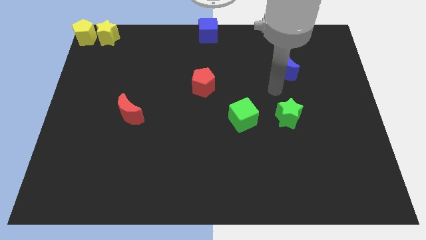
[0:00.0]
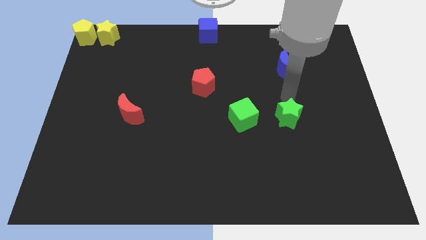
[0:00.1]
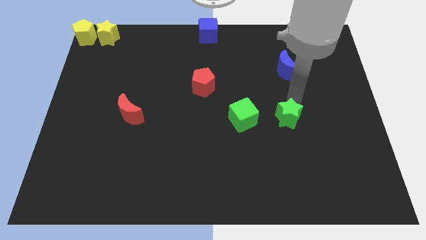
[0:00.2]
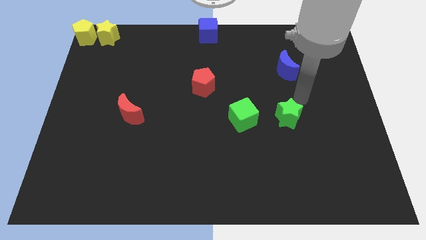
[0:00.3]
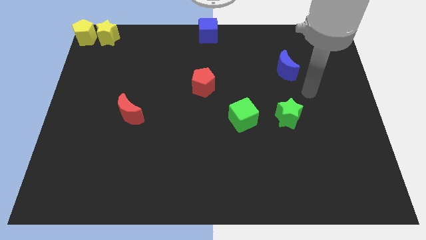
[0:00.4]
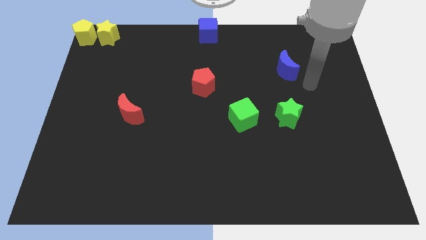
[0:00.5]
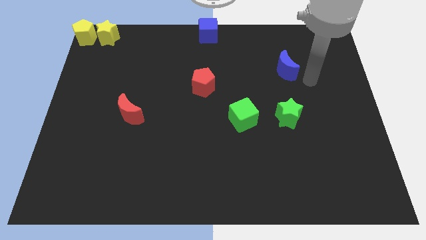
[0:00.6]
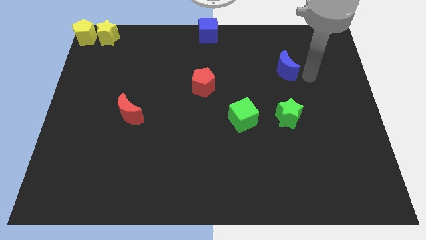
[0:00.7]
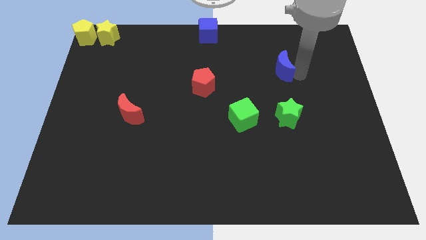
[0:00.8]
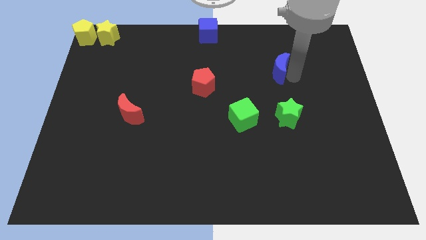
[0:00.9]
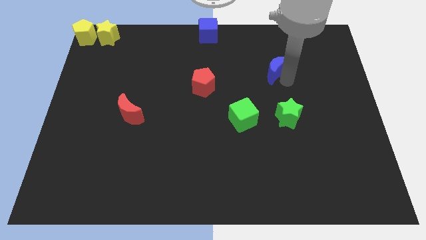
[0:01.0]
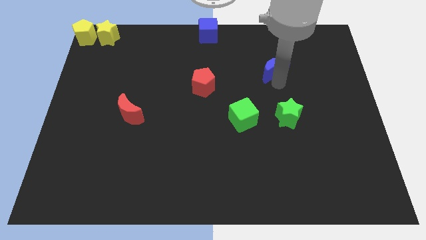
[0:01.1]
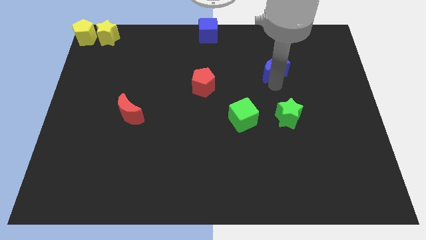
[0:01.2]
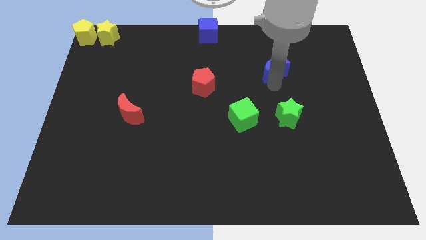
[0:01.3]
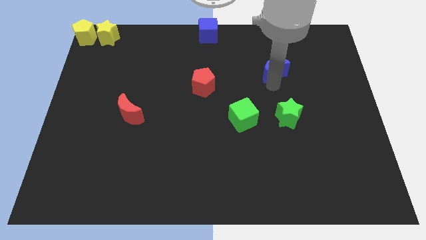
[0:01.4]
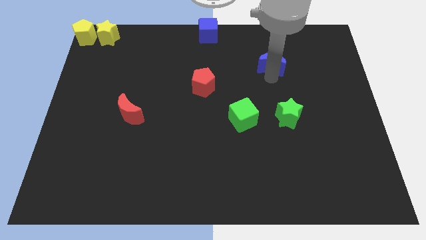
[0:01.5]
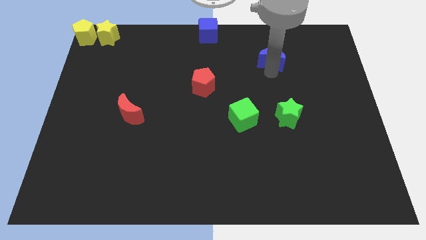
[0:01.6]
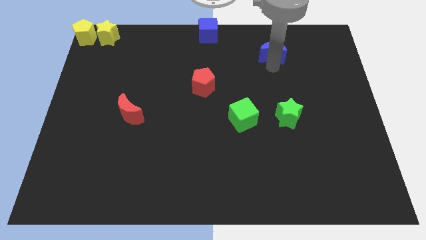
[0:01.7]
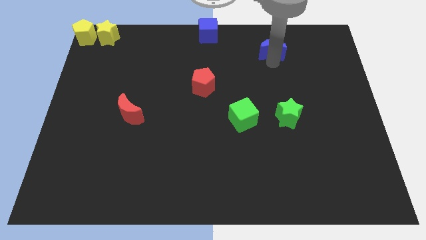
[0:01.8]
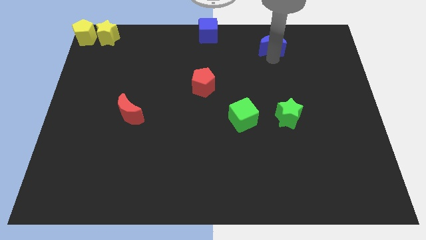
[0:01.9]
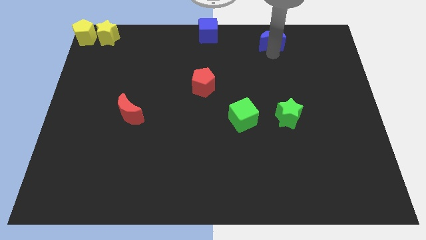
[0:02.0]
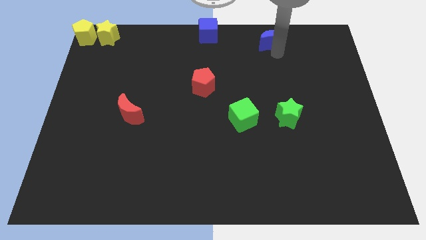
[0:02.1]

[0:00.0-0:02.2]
push the blue moon towards the top side of the board

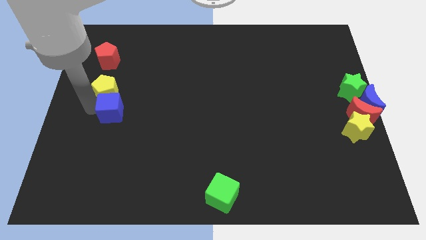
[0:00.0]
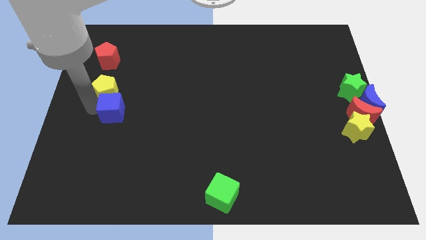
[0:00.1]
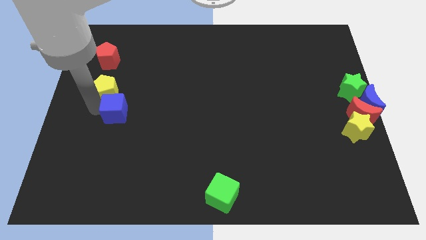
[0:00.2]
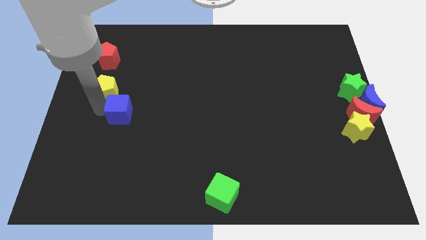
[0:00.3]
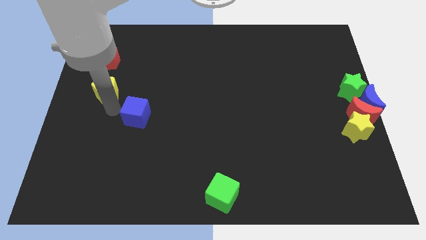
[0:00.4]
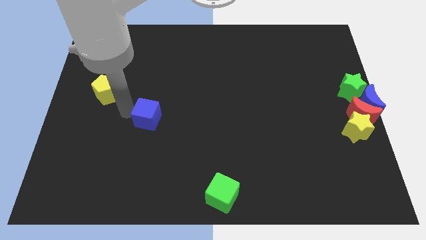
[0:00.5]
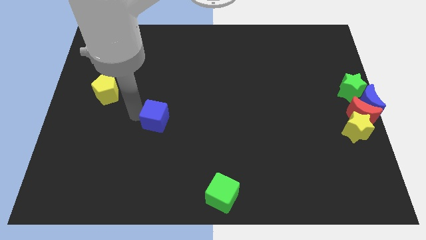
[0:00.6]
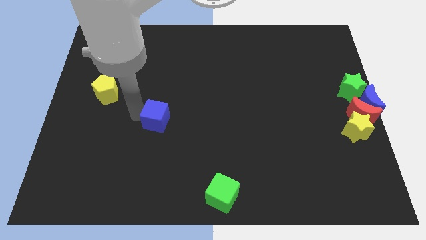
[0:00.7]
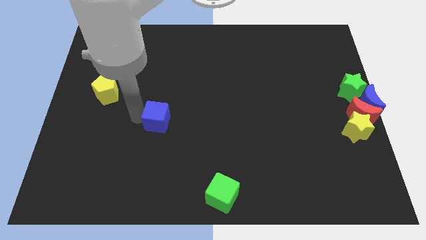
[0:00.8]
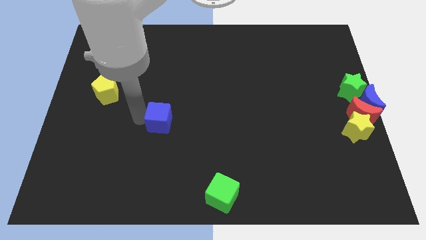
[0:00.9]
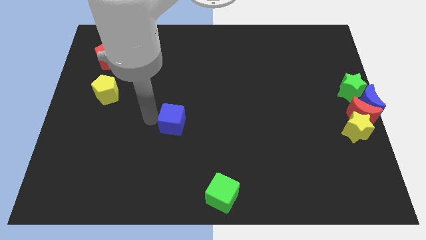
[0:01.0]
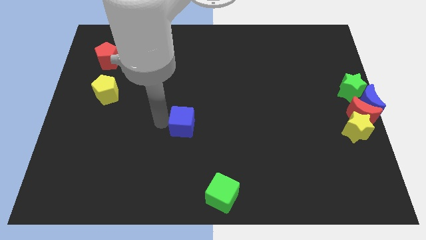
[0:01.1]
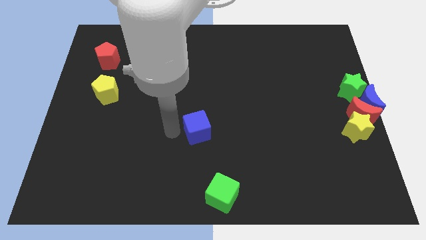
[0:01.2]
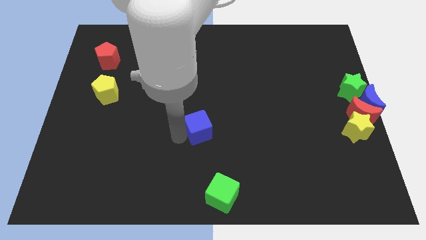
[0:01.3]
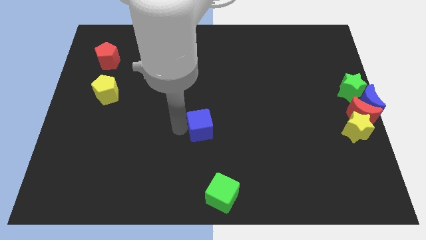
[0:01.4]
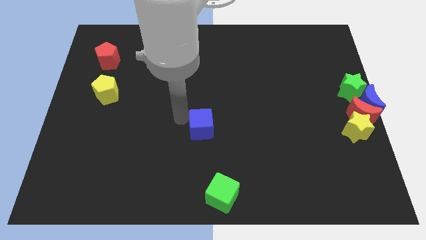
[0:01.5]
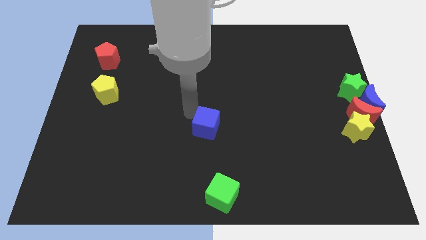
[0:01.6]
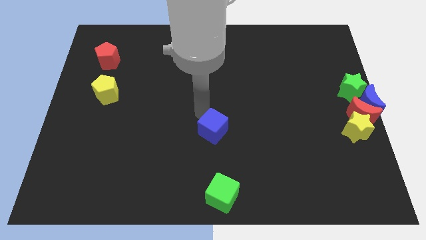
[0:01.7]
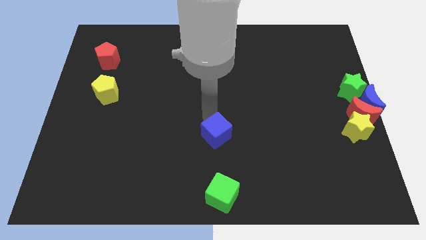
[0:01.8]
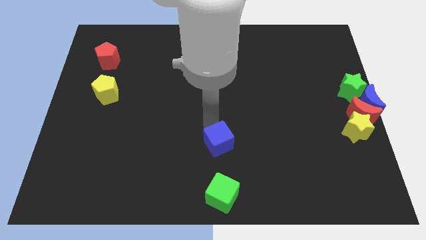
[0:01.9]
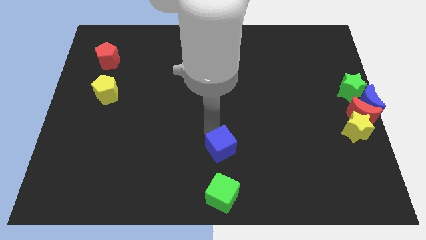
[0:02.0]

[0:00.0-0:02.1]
place the blue cube above the green cube

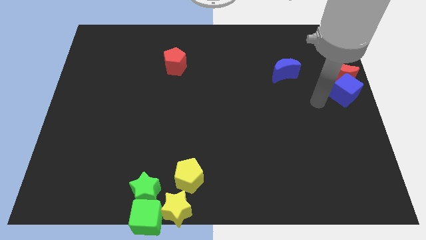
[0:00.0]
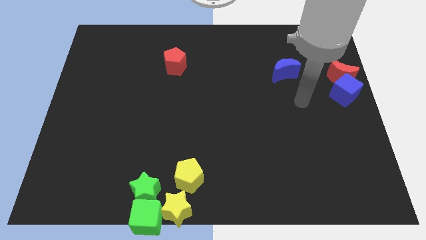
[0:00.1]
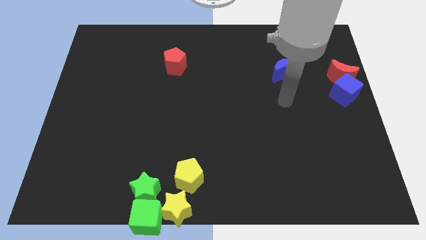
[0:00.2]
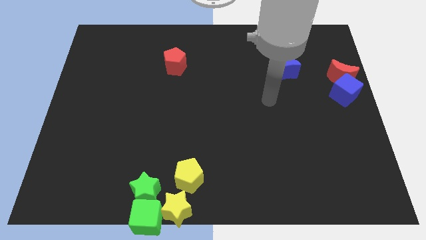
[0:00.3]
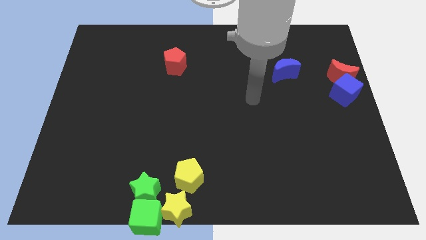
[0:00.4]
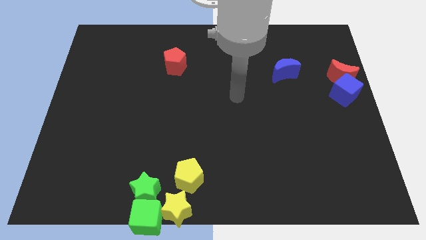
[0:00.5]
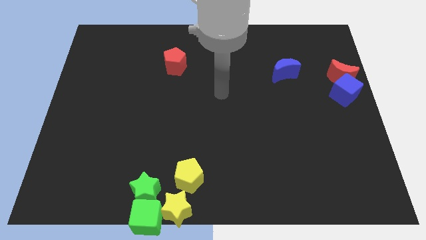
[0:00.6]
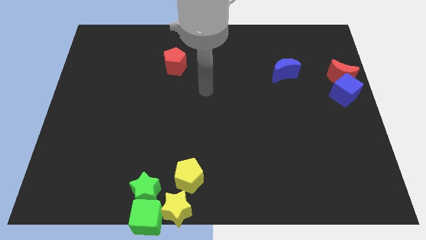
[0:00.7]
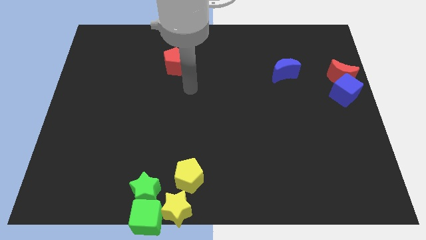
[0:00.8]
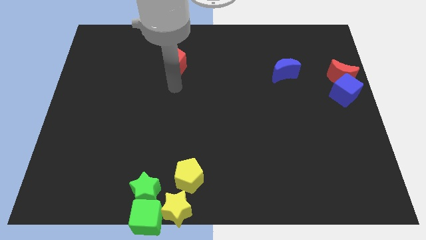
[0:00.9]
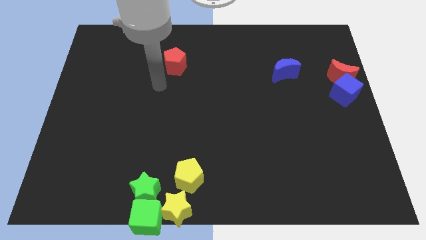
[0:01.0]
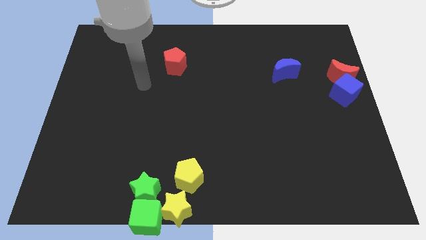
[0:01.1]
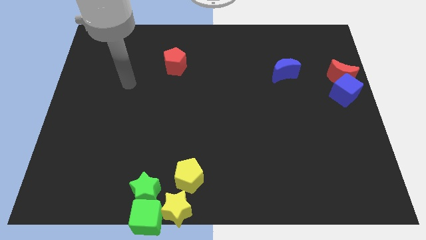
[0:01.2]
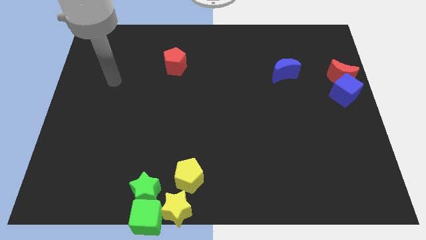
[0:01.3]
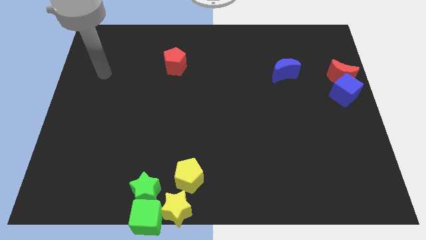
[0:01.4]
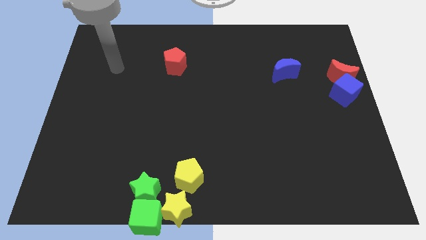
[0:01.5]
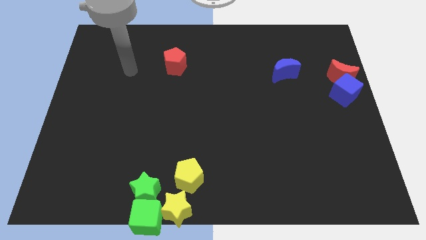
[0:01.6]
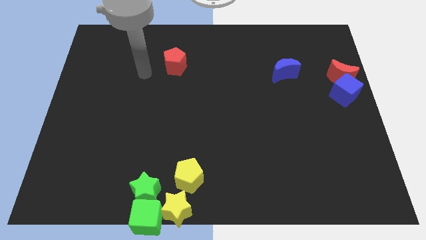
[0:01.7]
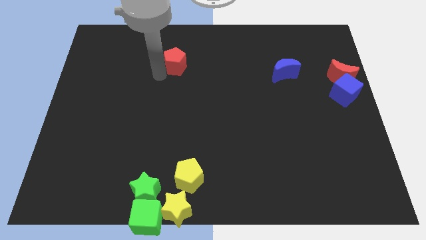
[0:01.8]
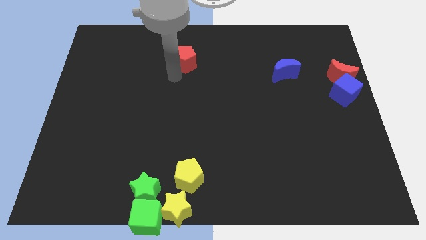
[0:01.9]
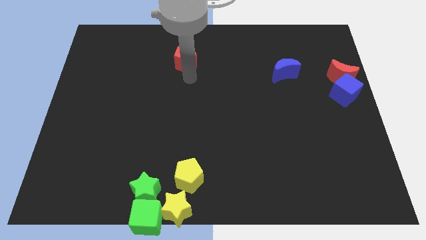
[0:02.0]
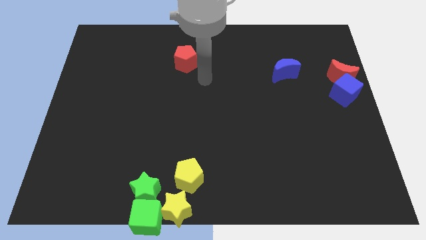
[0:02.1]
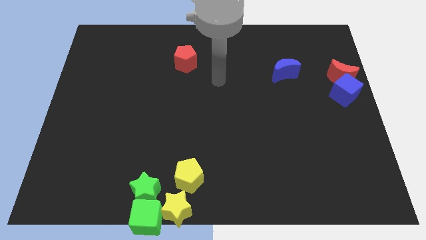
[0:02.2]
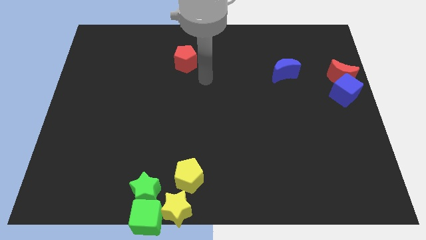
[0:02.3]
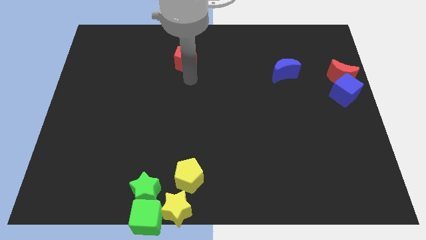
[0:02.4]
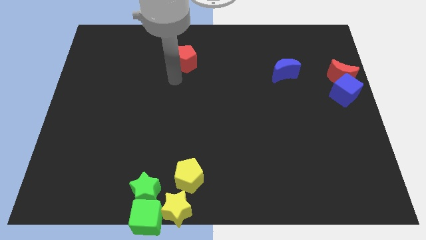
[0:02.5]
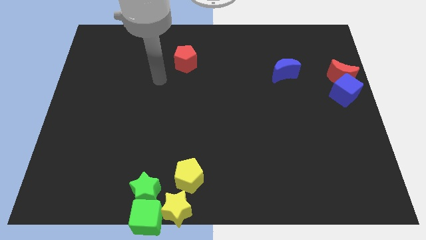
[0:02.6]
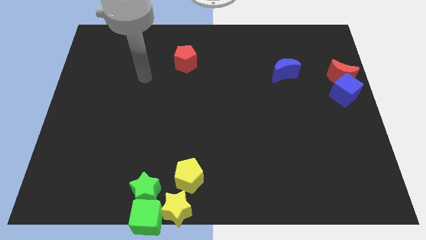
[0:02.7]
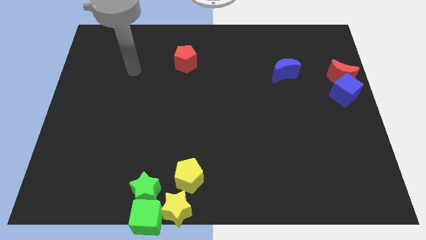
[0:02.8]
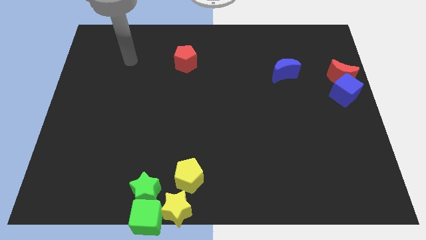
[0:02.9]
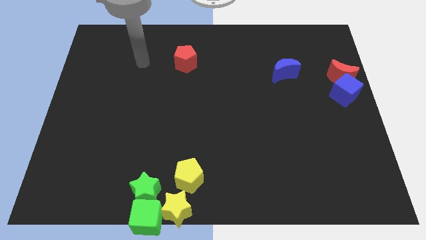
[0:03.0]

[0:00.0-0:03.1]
move your arm to the left of the red pentagon

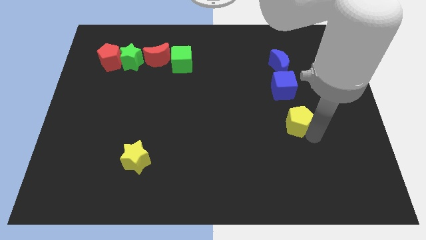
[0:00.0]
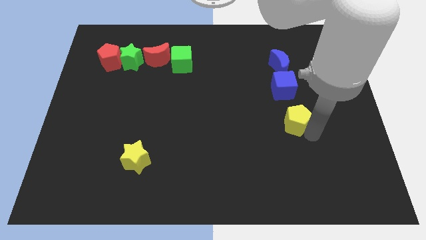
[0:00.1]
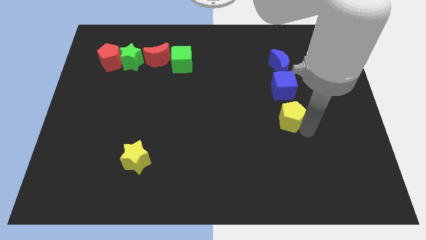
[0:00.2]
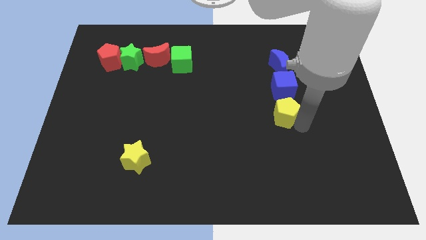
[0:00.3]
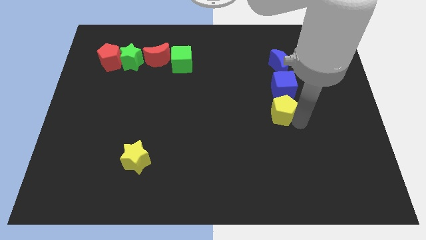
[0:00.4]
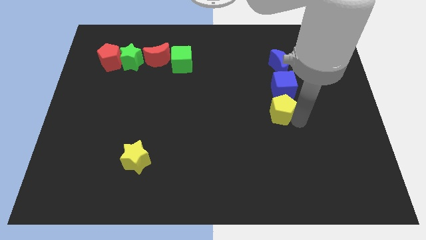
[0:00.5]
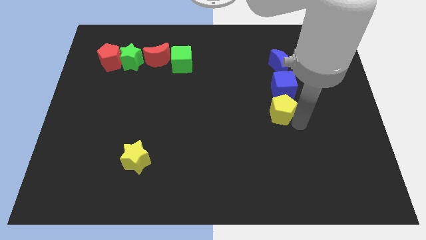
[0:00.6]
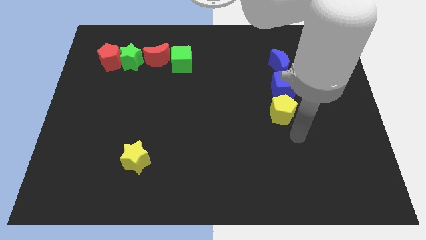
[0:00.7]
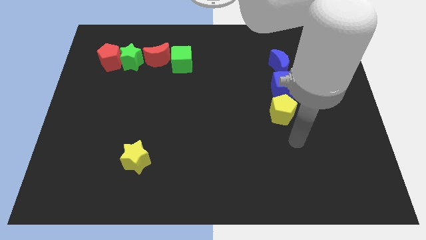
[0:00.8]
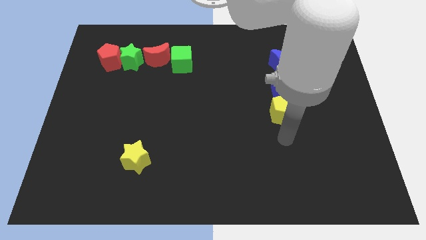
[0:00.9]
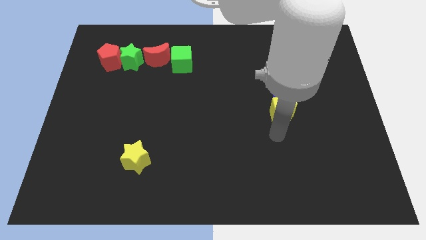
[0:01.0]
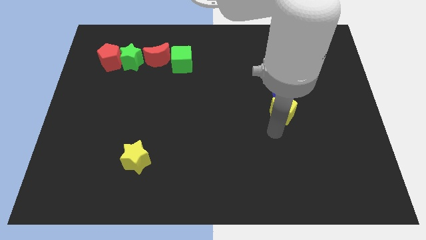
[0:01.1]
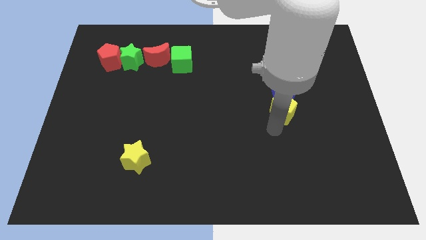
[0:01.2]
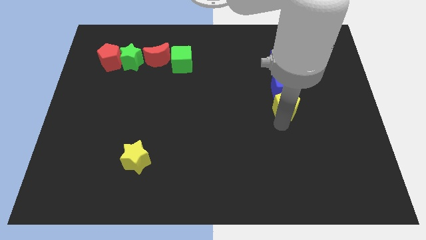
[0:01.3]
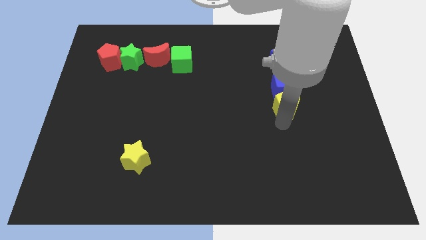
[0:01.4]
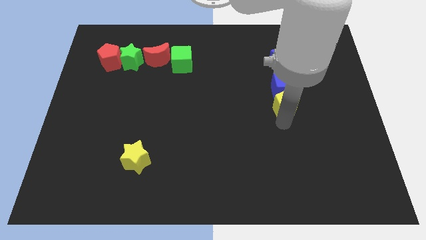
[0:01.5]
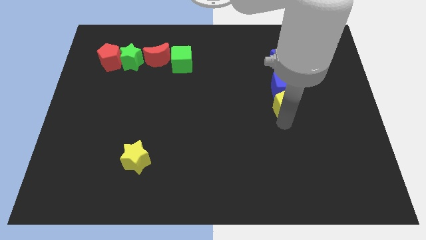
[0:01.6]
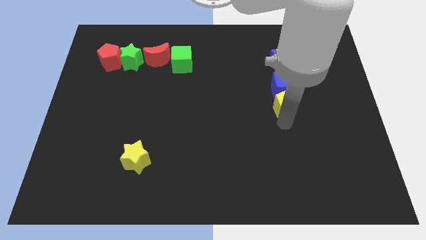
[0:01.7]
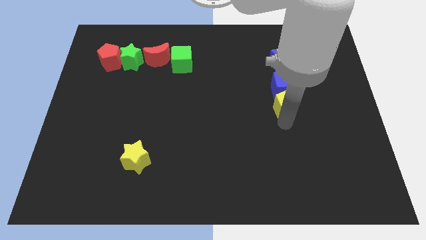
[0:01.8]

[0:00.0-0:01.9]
push the yellow pentagon close to the blue cube
